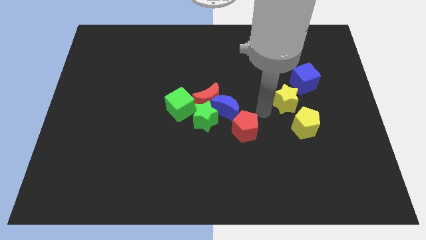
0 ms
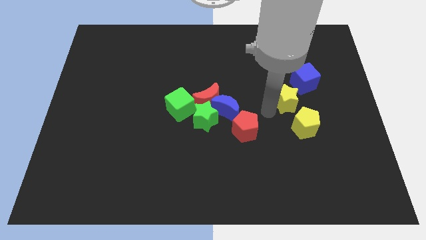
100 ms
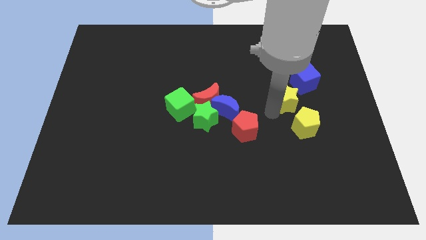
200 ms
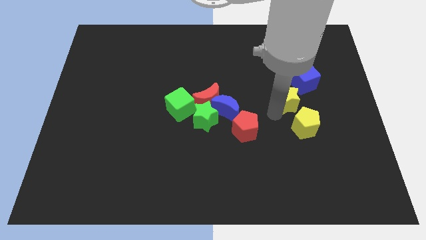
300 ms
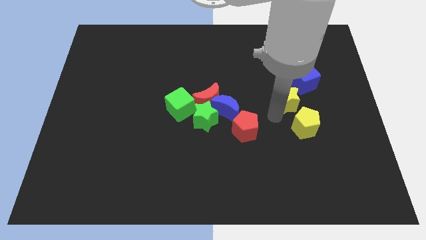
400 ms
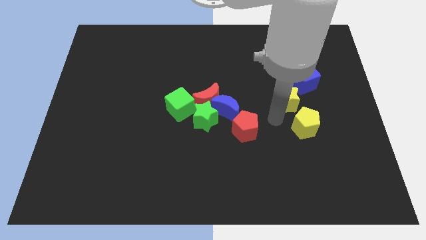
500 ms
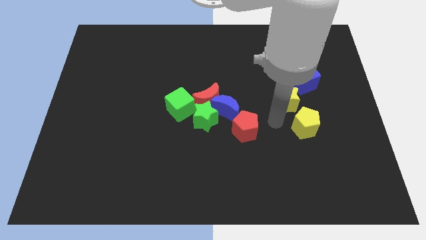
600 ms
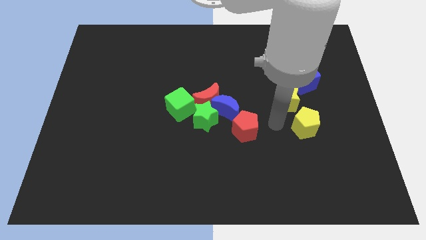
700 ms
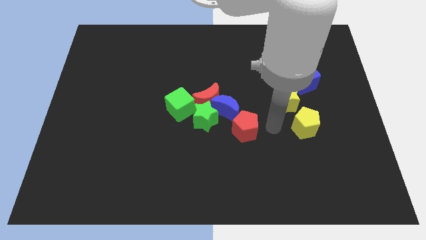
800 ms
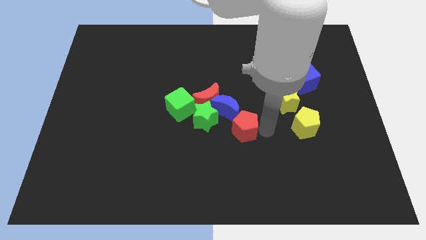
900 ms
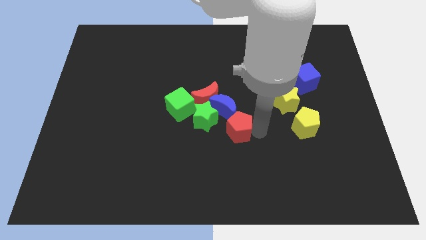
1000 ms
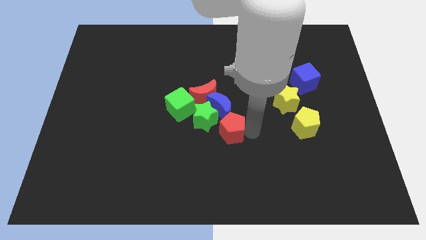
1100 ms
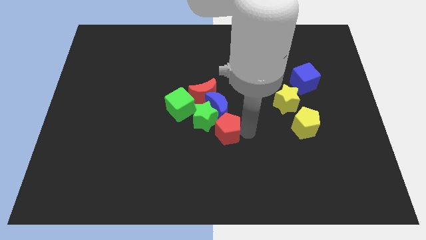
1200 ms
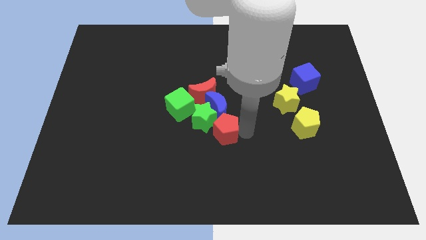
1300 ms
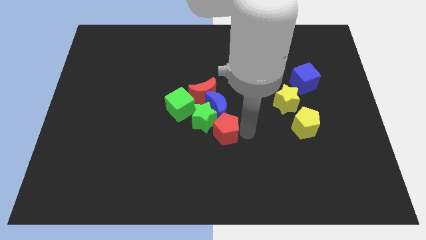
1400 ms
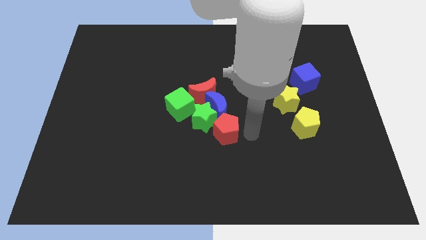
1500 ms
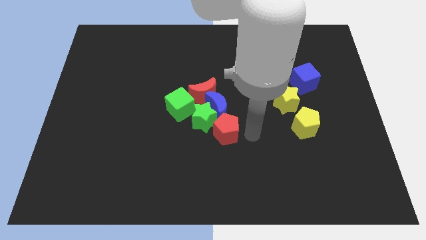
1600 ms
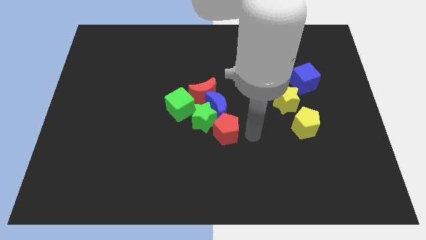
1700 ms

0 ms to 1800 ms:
move the red pentagon slightly on the left side

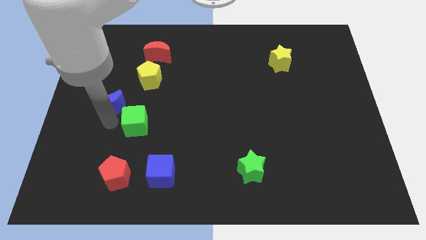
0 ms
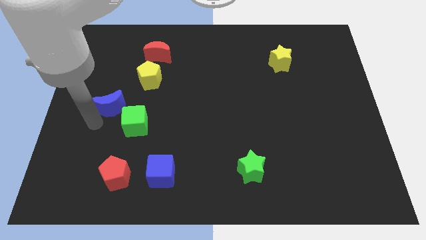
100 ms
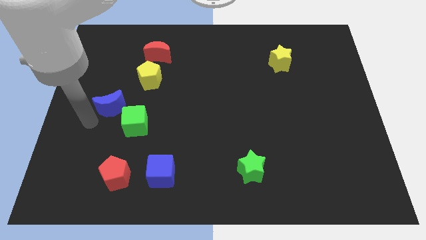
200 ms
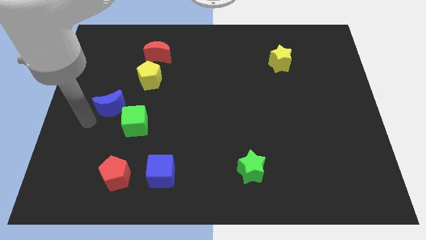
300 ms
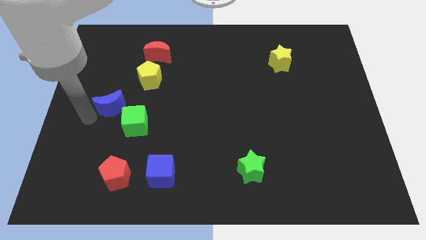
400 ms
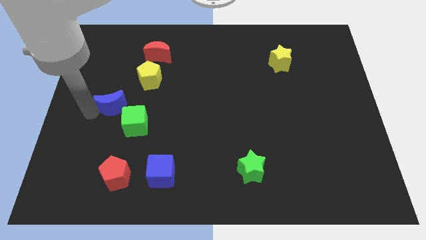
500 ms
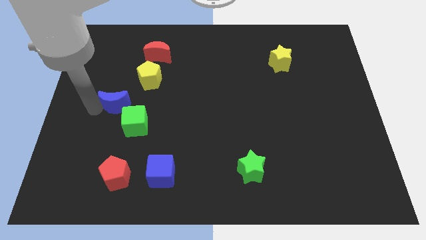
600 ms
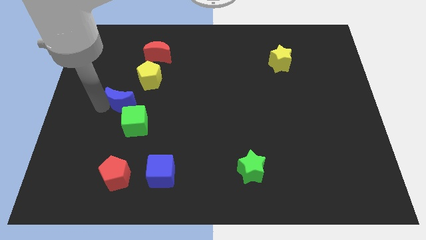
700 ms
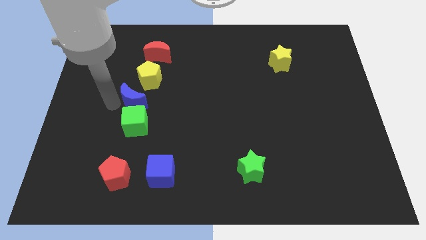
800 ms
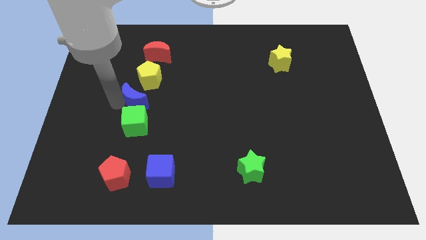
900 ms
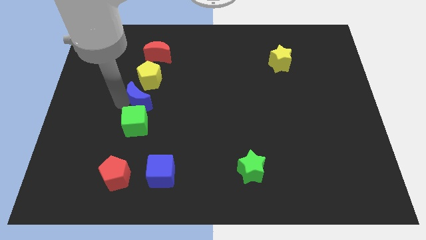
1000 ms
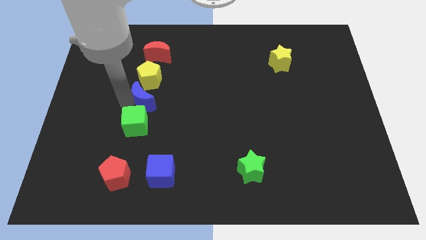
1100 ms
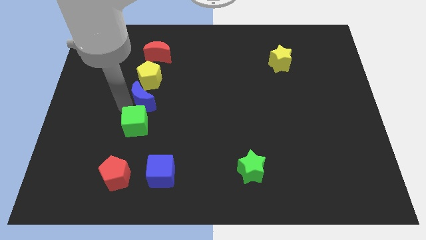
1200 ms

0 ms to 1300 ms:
push the blue crescent to the bottom side of the yellow pentagon

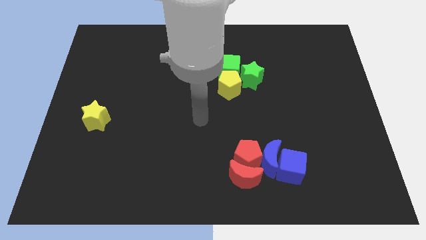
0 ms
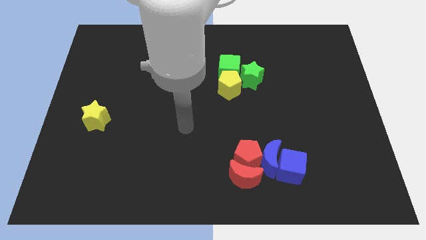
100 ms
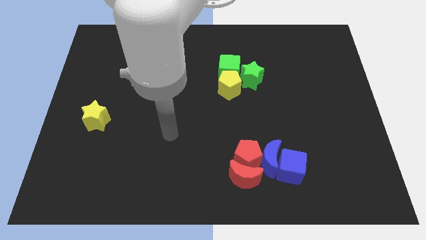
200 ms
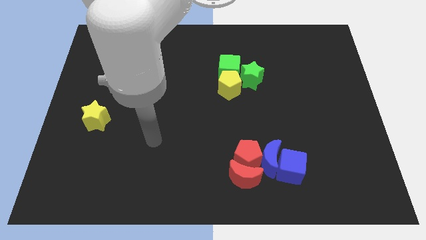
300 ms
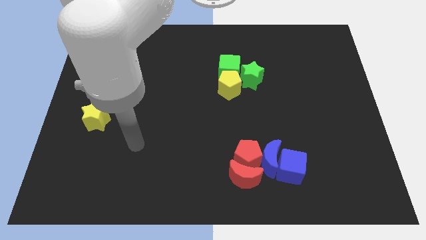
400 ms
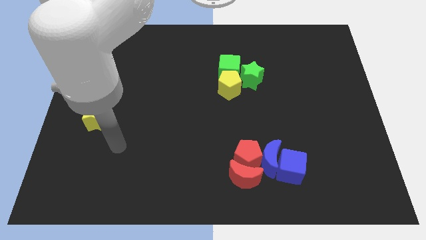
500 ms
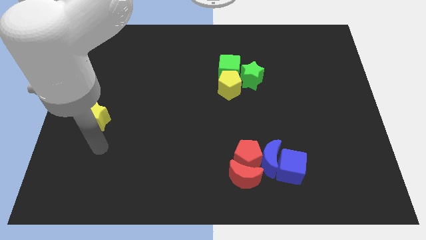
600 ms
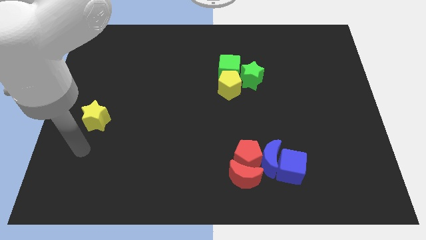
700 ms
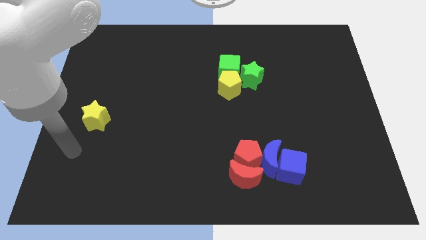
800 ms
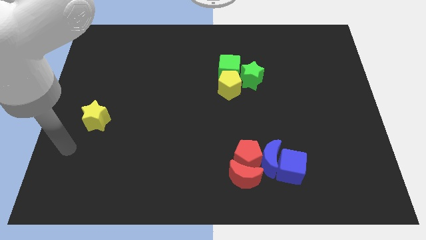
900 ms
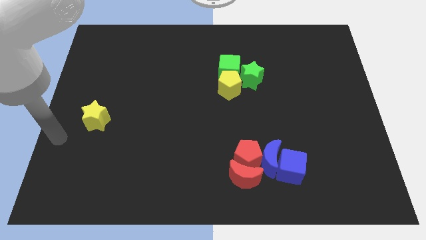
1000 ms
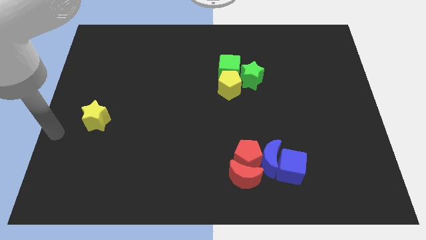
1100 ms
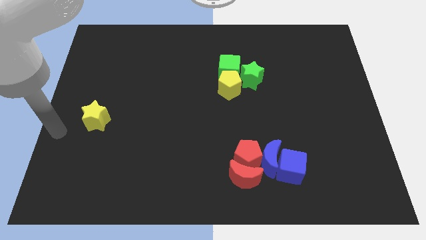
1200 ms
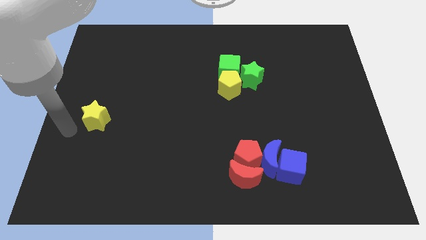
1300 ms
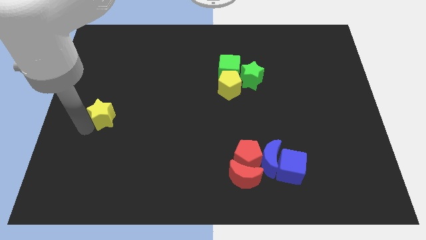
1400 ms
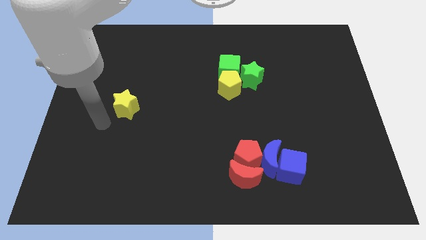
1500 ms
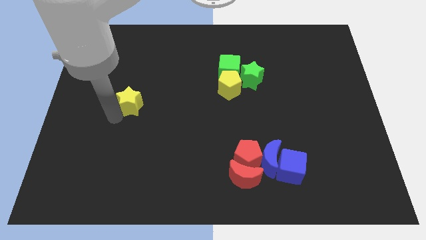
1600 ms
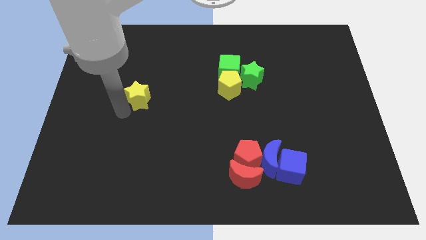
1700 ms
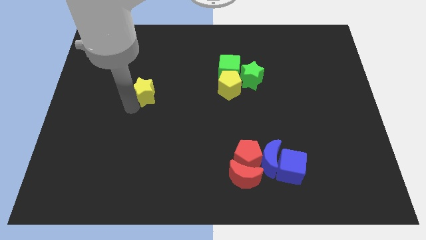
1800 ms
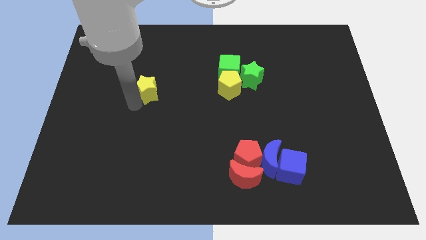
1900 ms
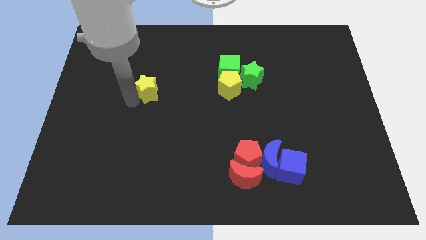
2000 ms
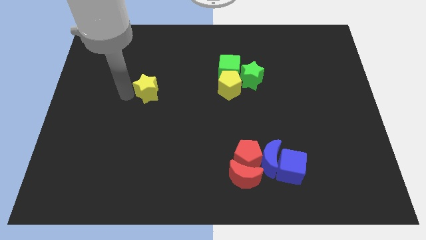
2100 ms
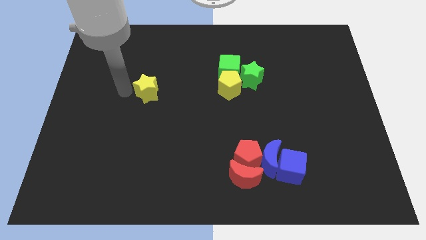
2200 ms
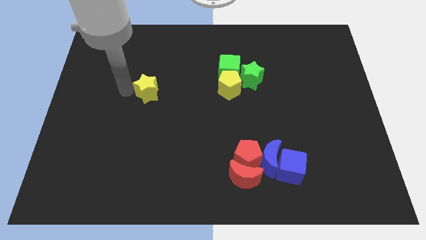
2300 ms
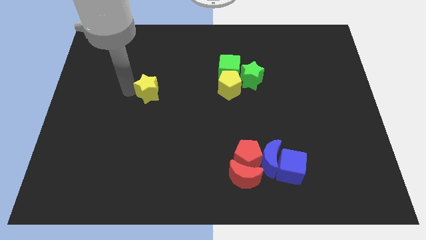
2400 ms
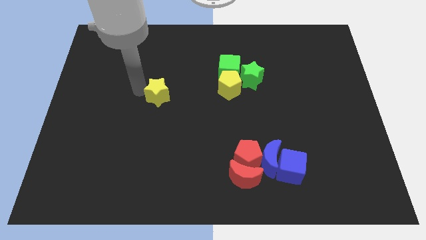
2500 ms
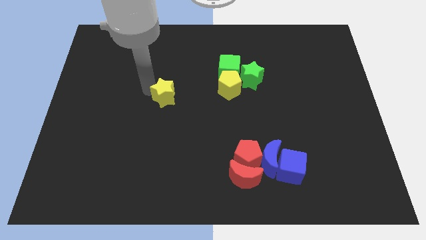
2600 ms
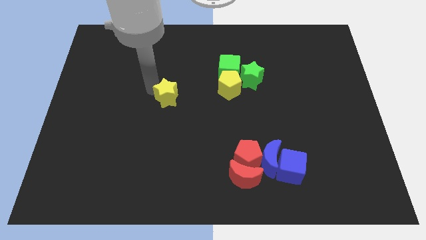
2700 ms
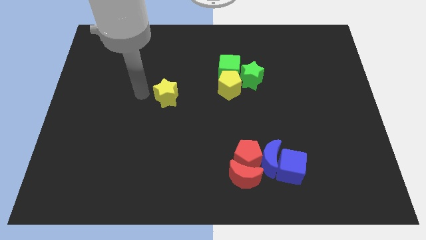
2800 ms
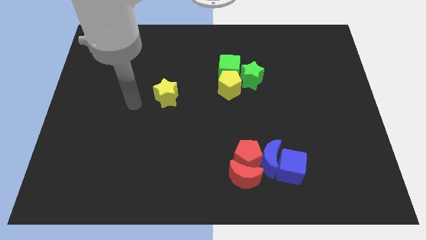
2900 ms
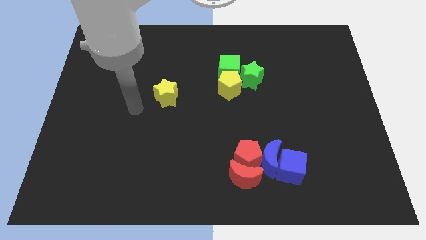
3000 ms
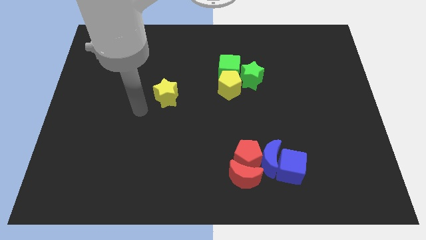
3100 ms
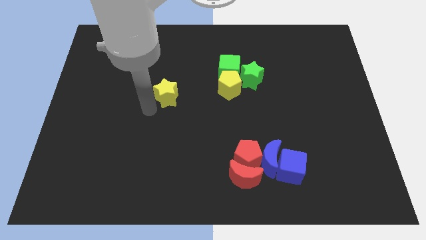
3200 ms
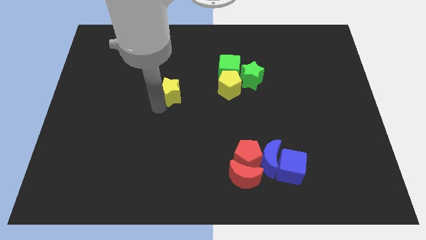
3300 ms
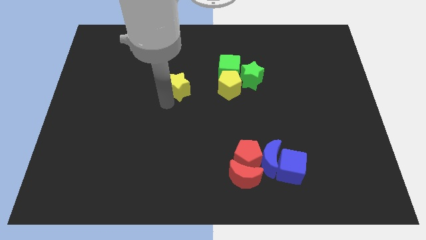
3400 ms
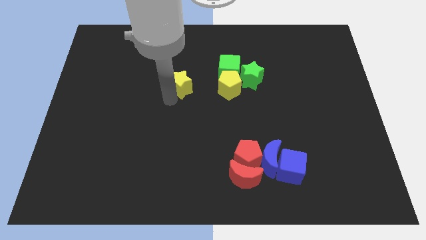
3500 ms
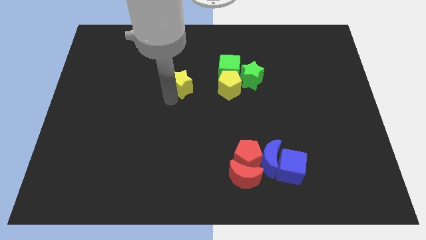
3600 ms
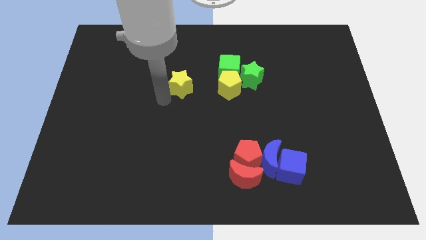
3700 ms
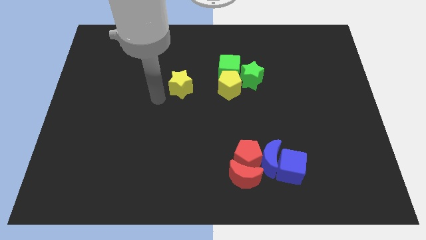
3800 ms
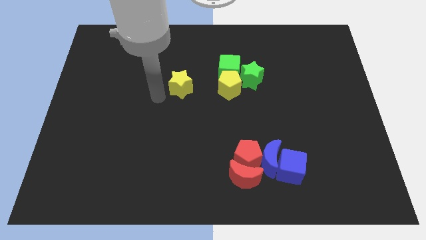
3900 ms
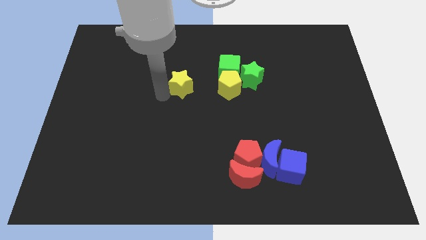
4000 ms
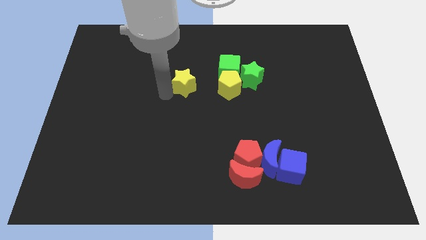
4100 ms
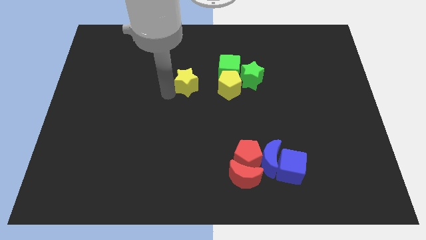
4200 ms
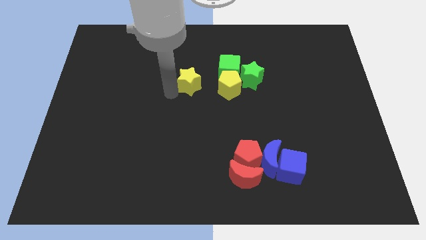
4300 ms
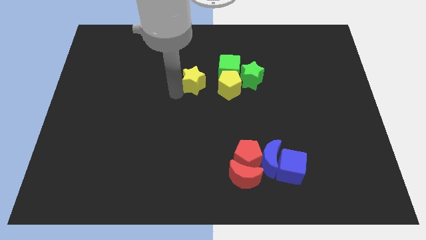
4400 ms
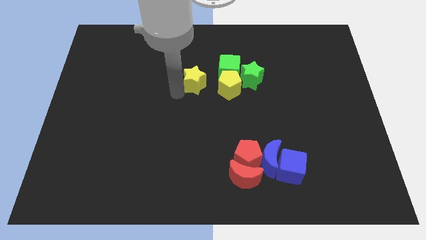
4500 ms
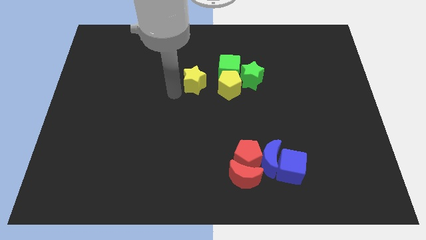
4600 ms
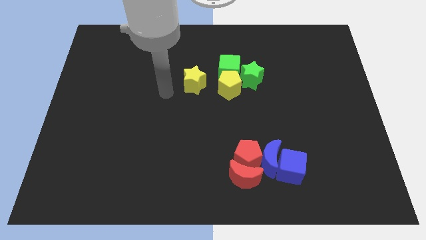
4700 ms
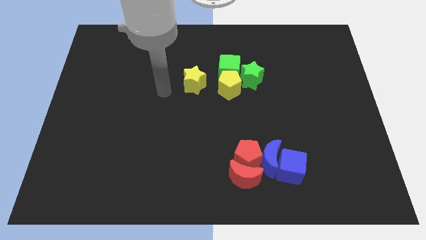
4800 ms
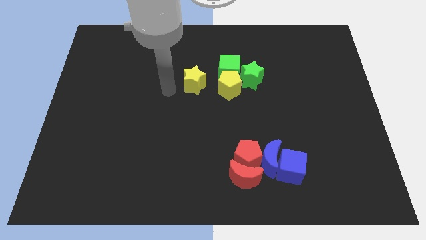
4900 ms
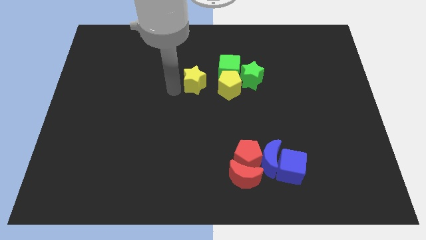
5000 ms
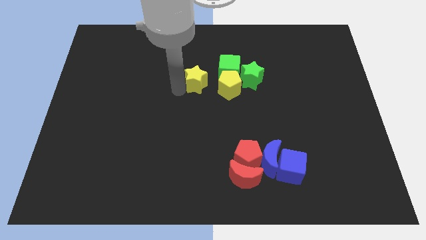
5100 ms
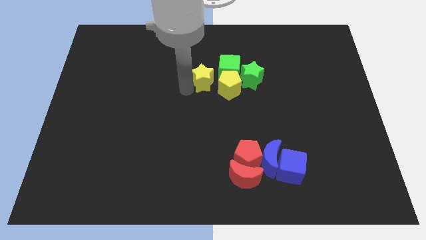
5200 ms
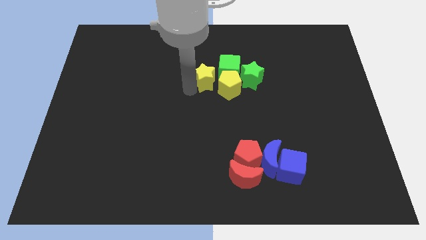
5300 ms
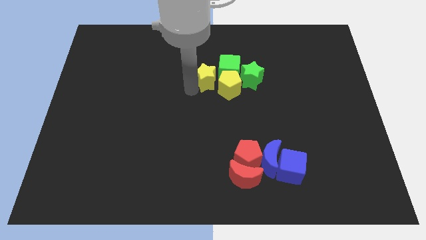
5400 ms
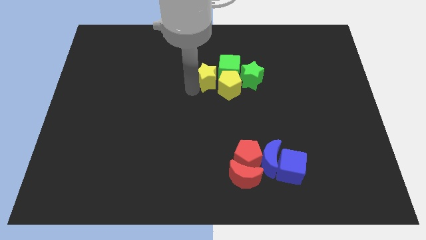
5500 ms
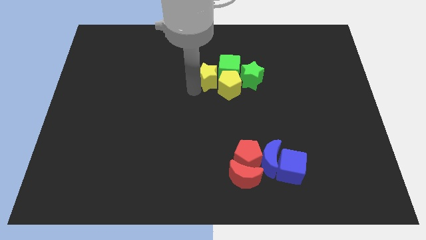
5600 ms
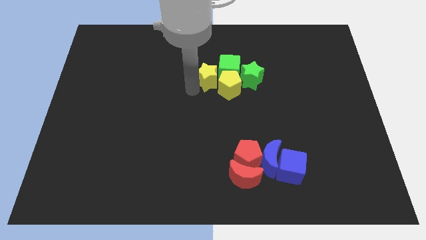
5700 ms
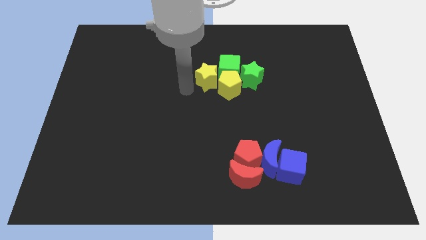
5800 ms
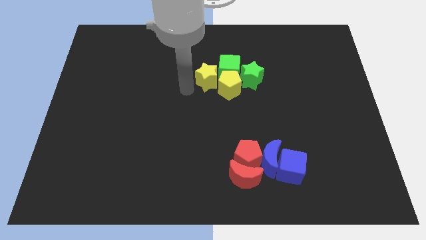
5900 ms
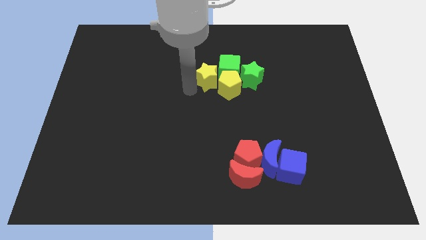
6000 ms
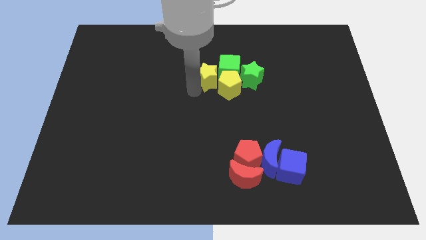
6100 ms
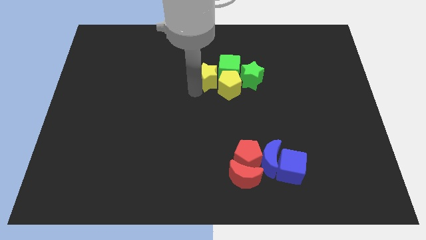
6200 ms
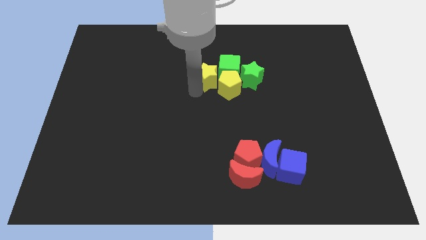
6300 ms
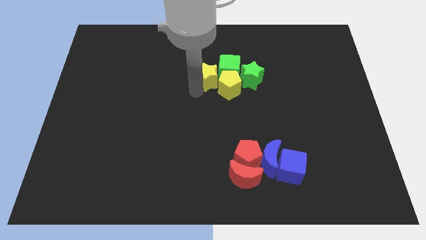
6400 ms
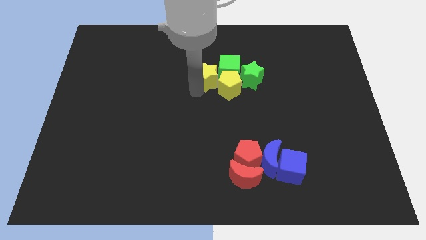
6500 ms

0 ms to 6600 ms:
push the yellow star into the green cube
